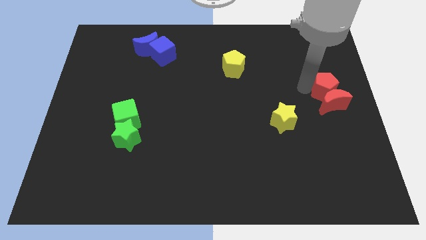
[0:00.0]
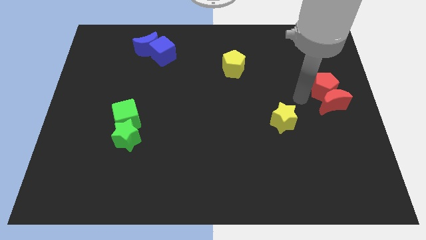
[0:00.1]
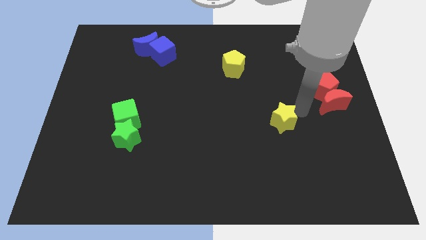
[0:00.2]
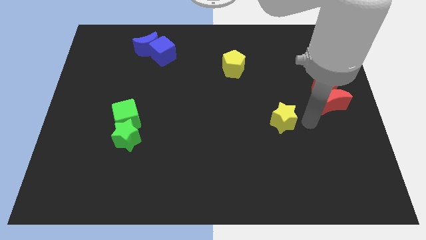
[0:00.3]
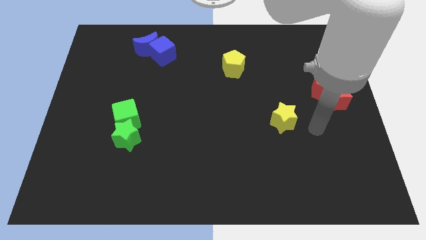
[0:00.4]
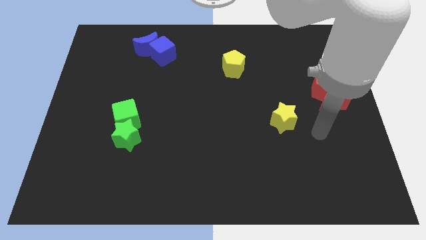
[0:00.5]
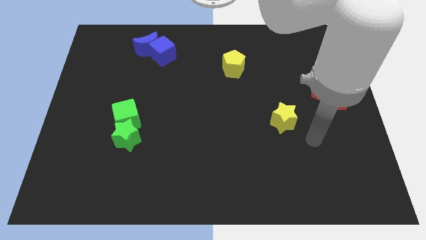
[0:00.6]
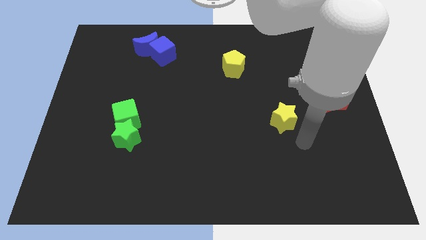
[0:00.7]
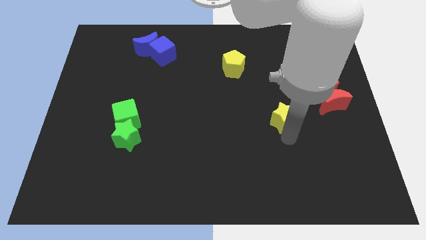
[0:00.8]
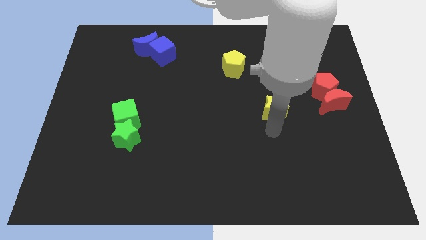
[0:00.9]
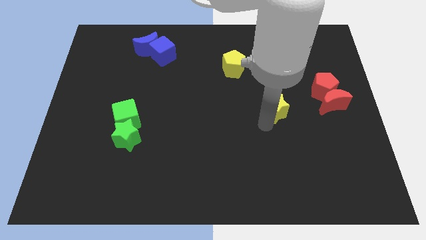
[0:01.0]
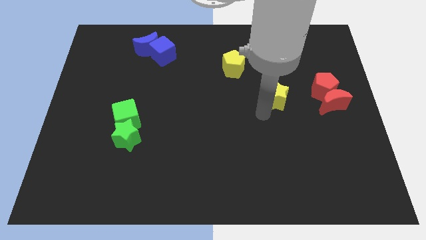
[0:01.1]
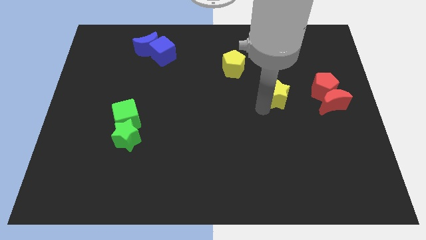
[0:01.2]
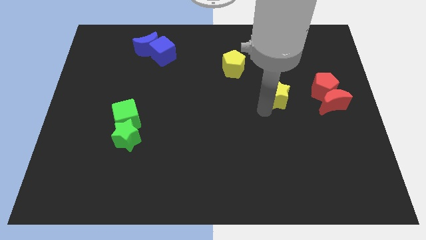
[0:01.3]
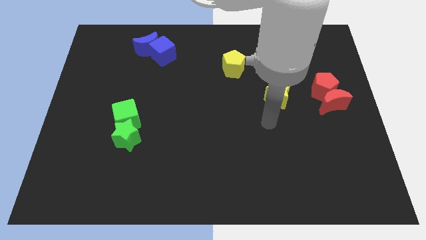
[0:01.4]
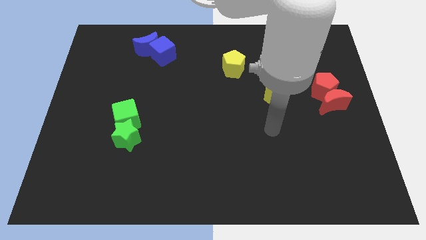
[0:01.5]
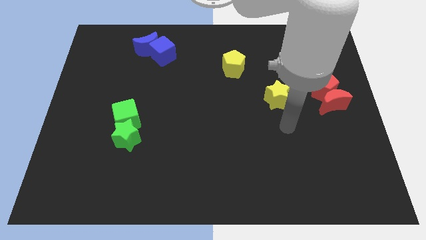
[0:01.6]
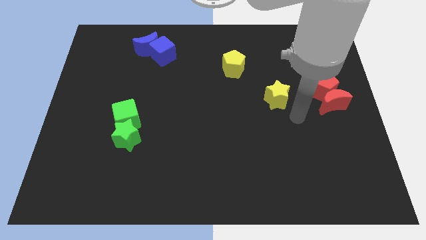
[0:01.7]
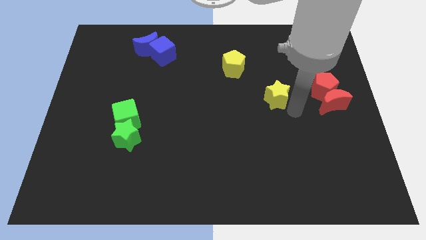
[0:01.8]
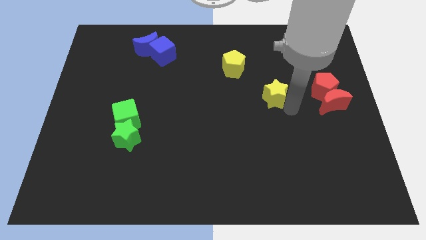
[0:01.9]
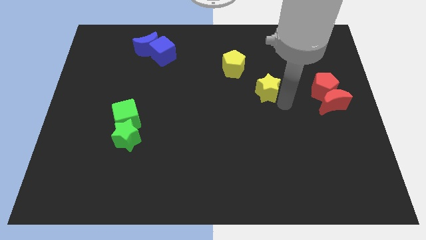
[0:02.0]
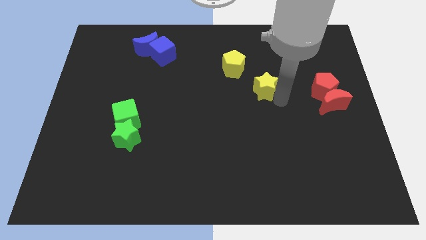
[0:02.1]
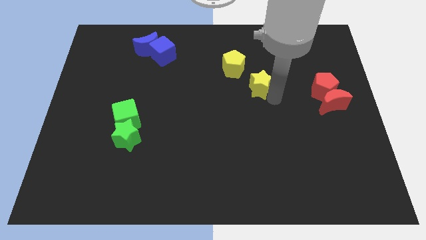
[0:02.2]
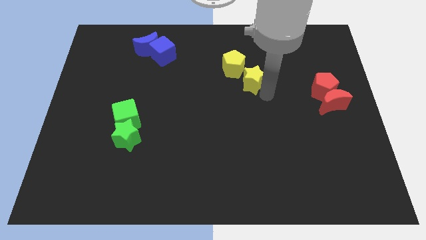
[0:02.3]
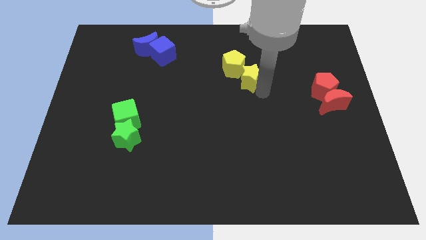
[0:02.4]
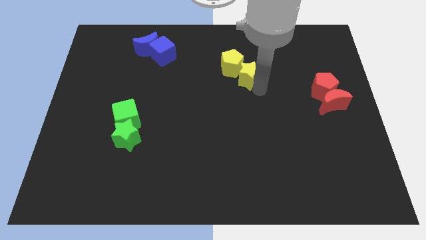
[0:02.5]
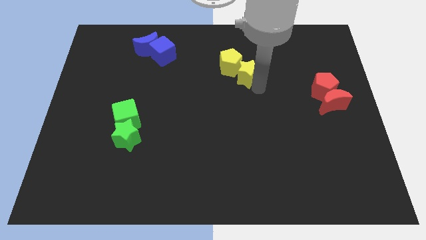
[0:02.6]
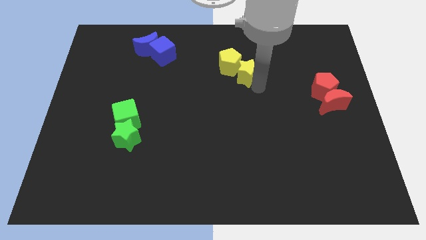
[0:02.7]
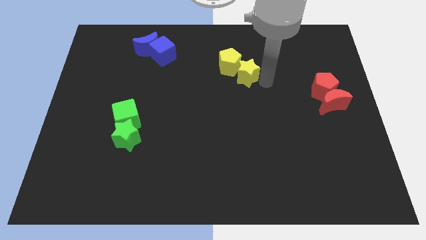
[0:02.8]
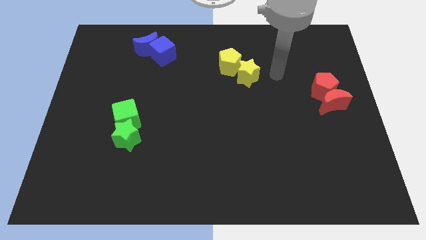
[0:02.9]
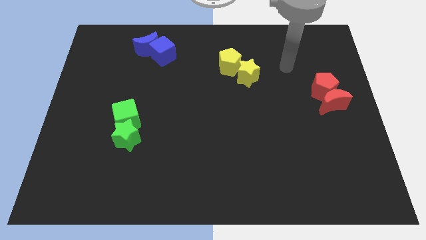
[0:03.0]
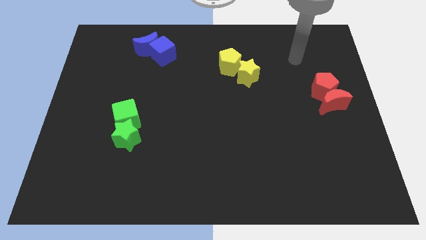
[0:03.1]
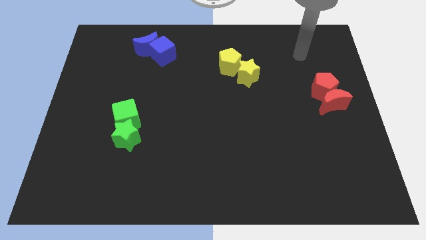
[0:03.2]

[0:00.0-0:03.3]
push the yellow star into the yellow pentagon

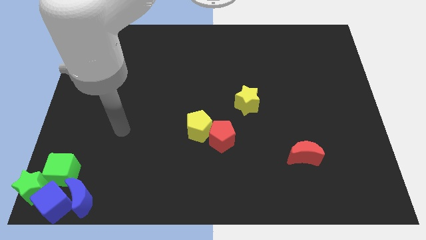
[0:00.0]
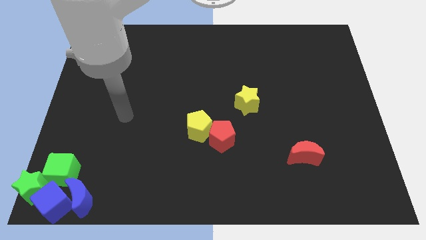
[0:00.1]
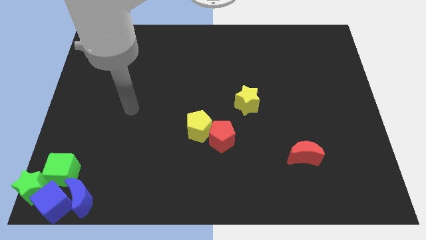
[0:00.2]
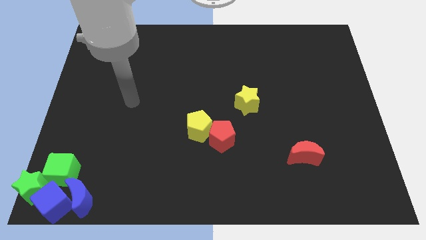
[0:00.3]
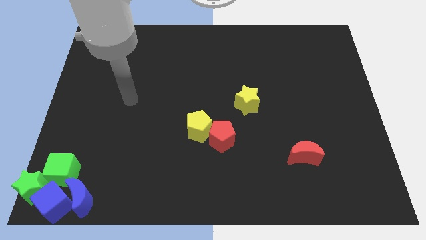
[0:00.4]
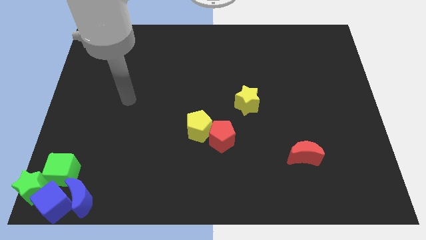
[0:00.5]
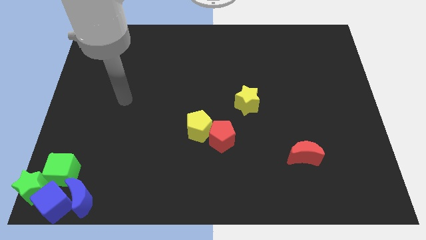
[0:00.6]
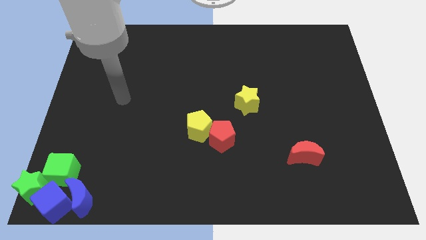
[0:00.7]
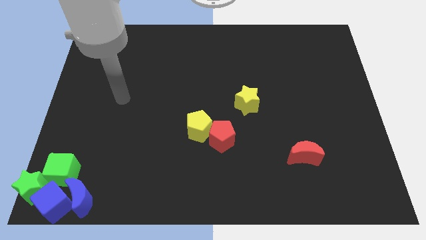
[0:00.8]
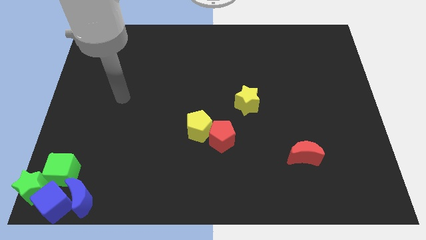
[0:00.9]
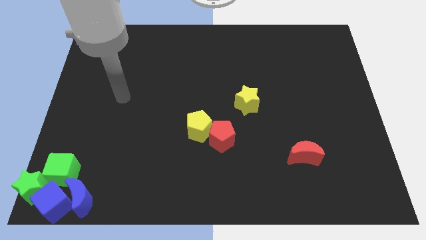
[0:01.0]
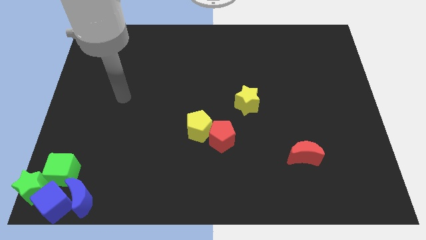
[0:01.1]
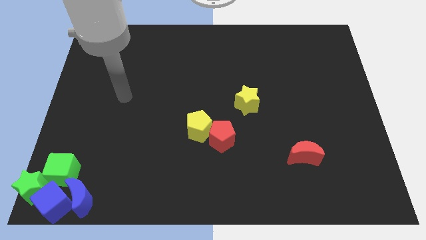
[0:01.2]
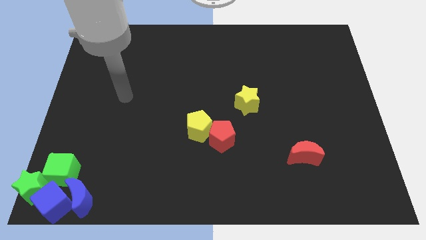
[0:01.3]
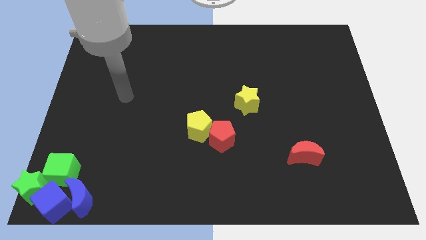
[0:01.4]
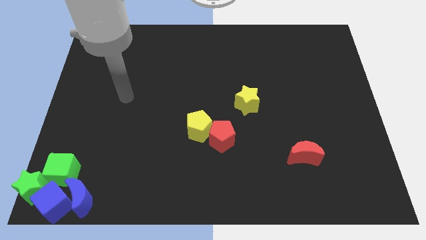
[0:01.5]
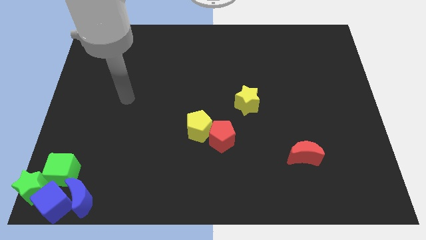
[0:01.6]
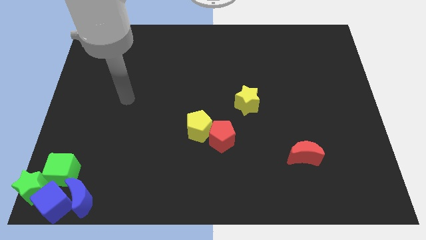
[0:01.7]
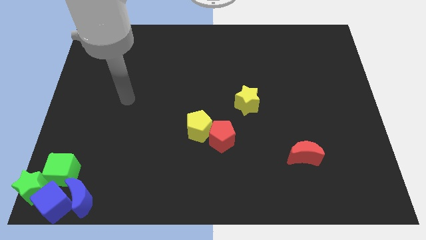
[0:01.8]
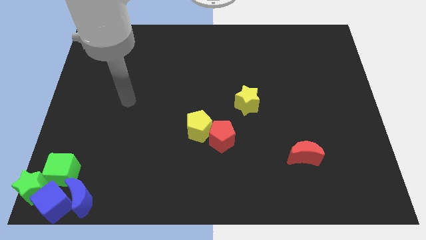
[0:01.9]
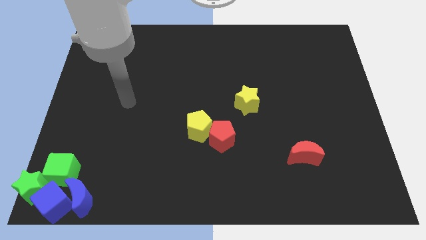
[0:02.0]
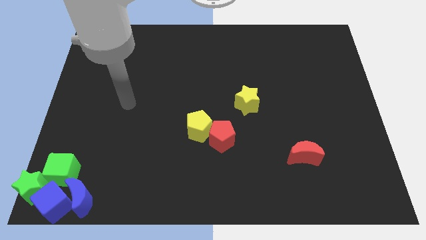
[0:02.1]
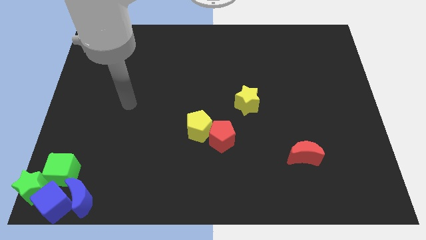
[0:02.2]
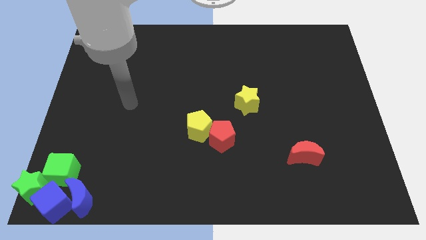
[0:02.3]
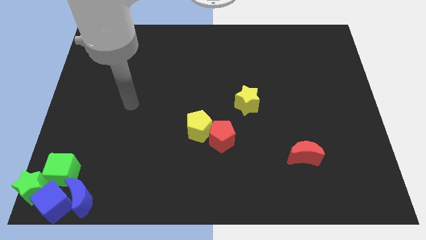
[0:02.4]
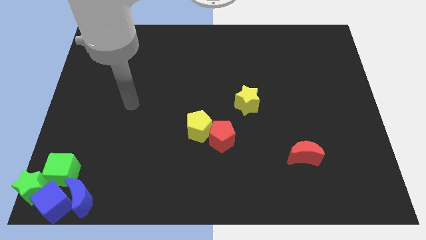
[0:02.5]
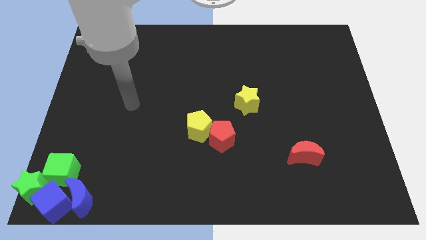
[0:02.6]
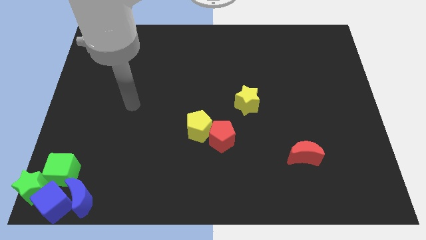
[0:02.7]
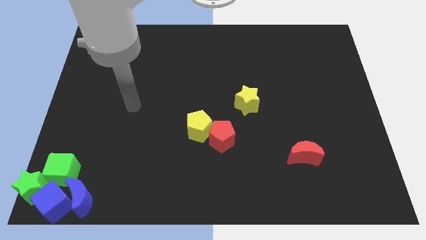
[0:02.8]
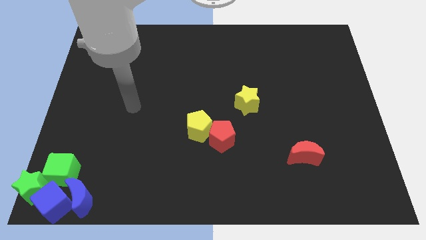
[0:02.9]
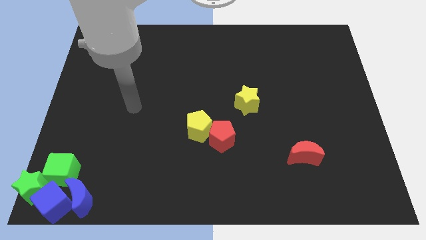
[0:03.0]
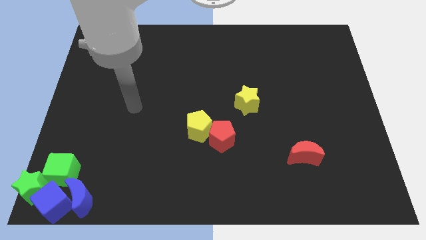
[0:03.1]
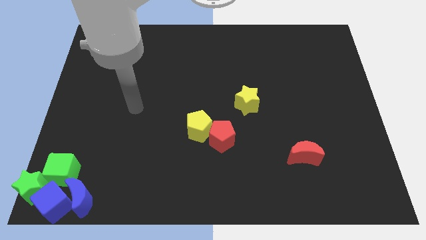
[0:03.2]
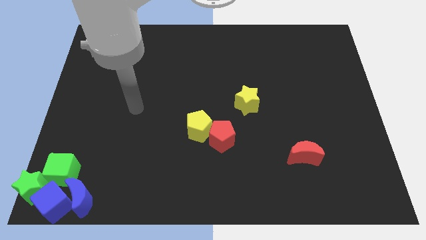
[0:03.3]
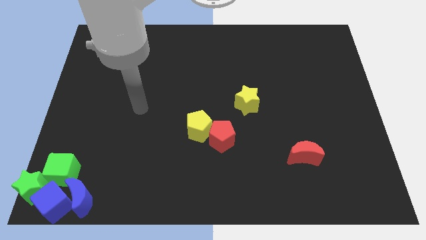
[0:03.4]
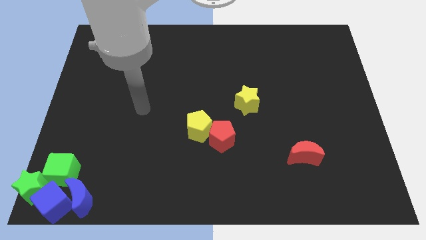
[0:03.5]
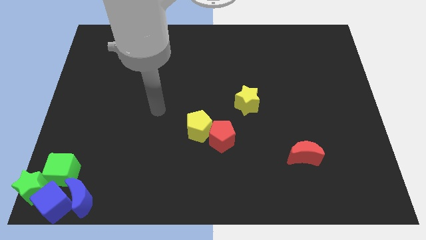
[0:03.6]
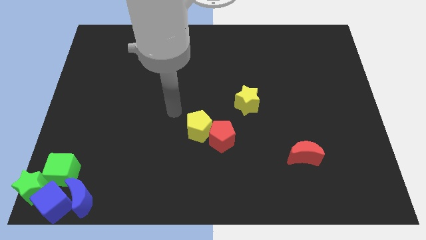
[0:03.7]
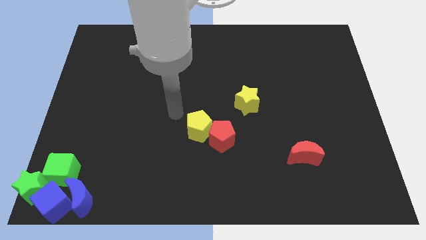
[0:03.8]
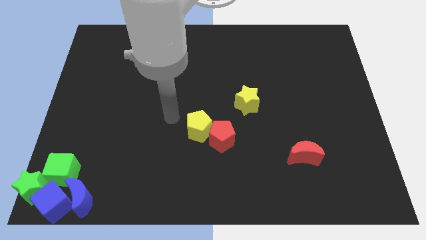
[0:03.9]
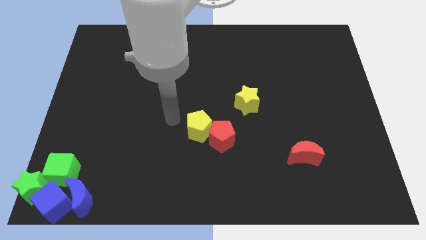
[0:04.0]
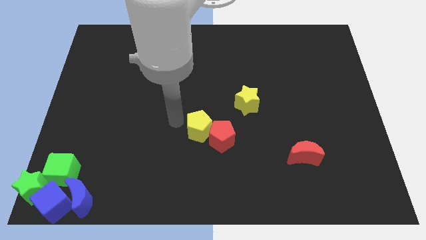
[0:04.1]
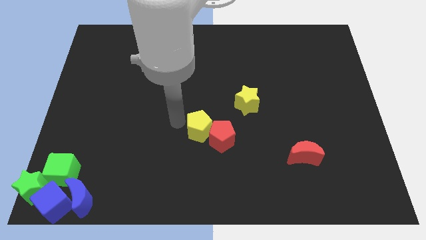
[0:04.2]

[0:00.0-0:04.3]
move your arm to the left of the yellow pentagon

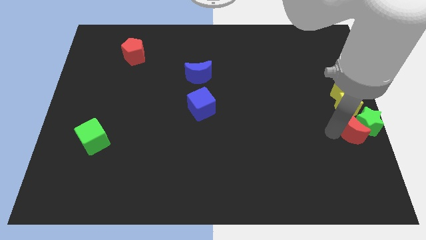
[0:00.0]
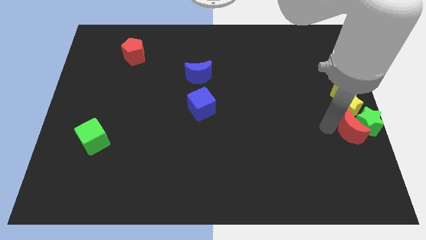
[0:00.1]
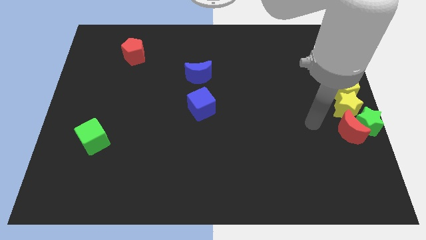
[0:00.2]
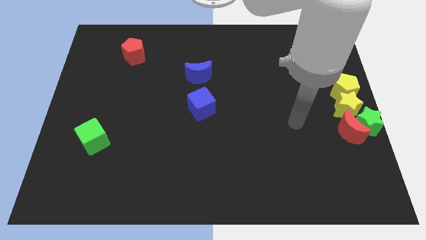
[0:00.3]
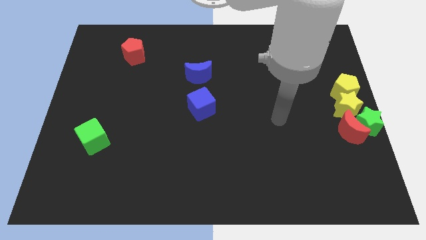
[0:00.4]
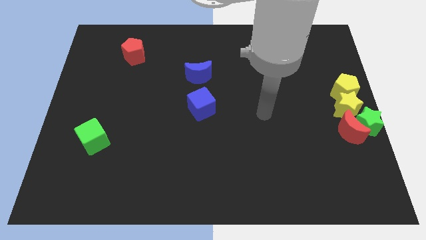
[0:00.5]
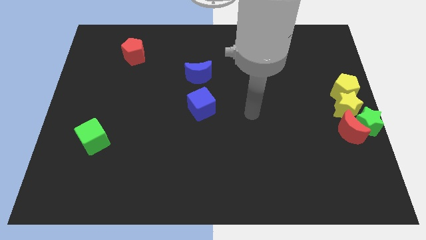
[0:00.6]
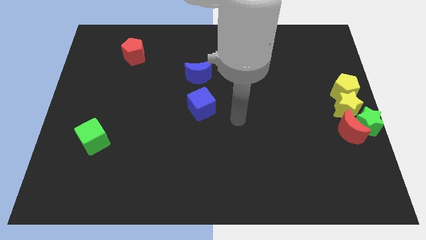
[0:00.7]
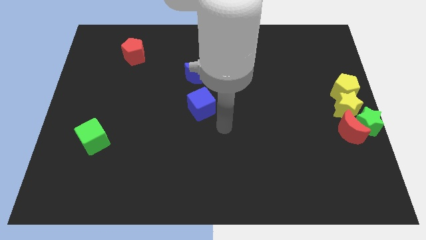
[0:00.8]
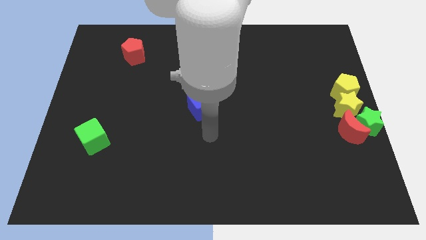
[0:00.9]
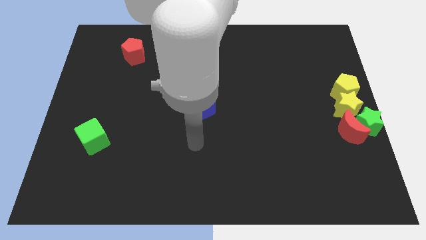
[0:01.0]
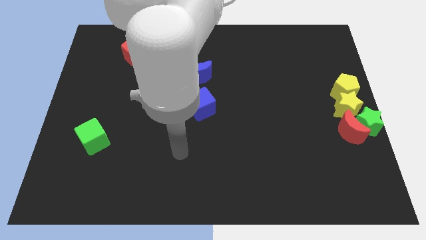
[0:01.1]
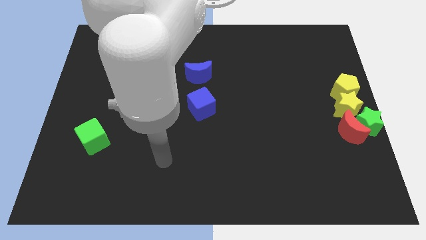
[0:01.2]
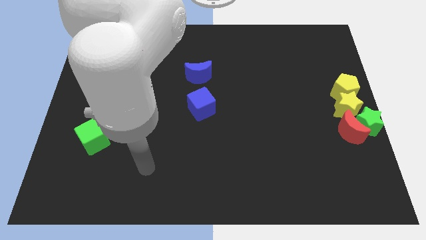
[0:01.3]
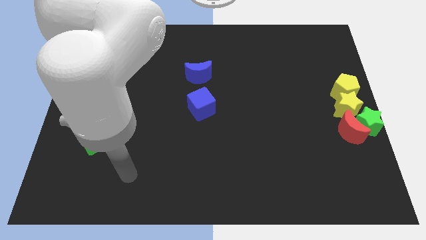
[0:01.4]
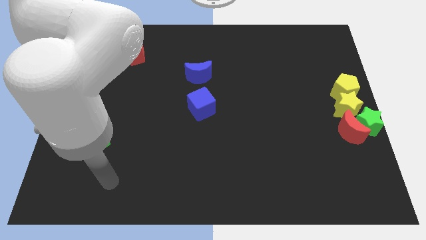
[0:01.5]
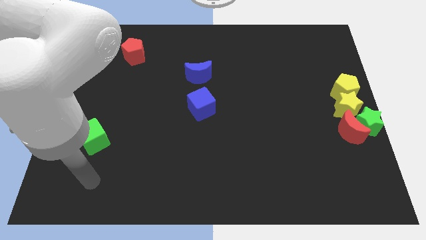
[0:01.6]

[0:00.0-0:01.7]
move your arm below the green cube
